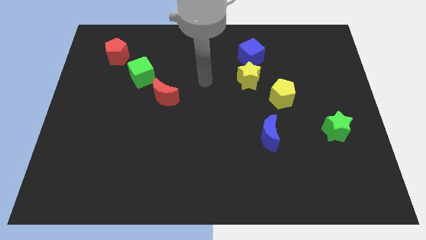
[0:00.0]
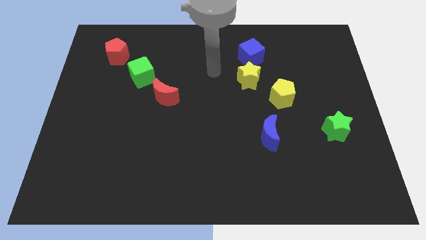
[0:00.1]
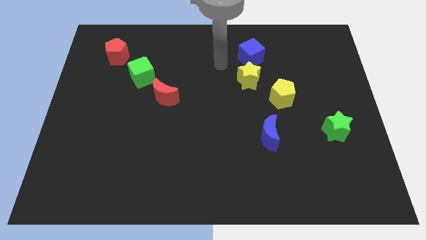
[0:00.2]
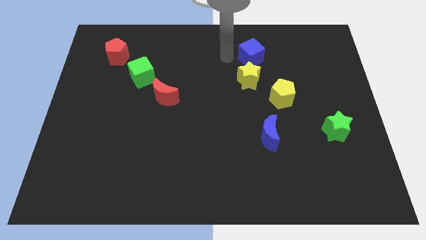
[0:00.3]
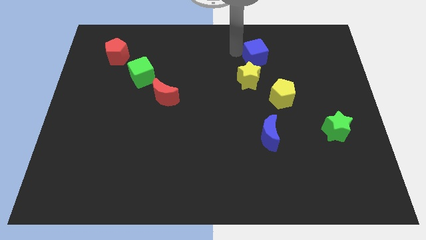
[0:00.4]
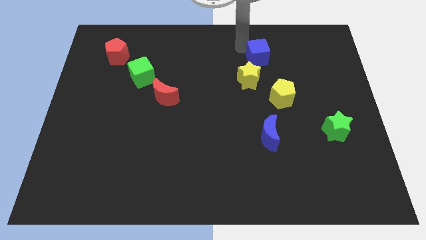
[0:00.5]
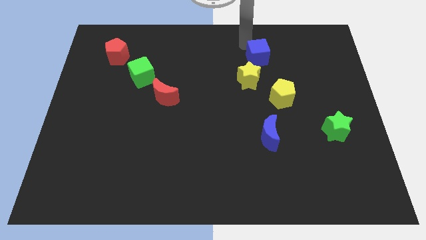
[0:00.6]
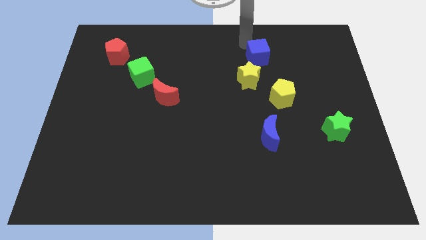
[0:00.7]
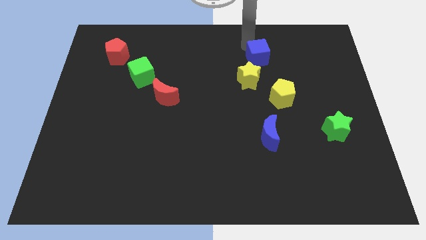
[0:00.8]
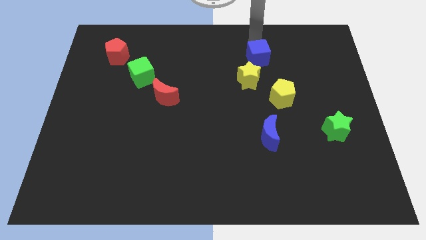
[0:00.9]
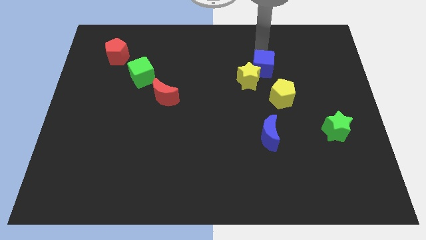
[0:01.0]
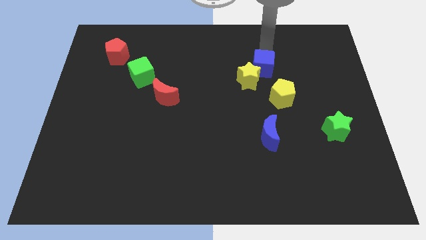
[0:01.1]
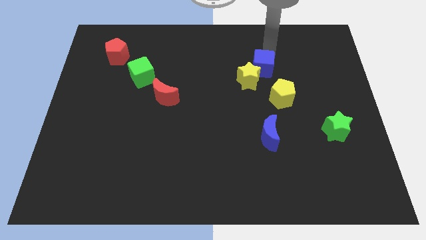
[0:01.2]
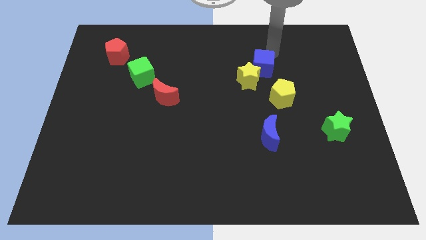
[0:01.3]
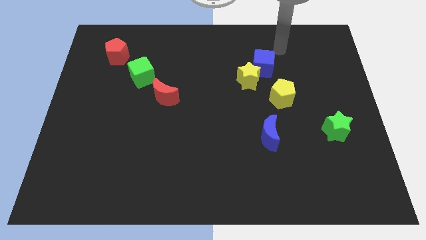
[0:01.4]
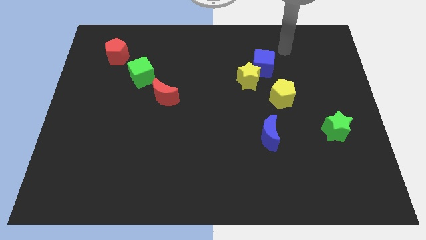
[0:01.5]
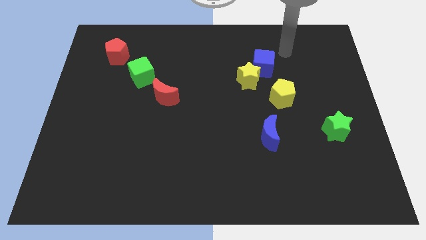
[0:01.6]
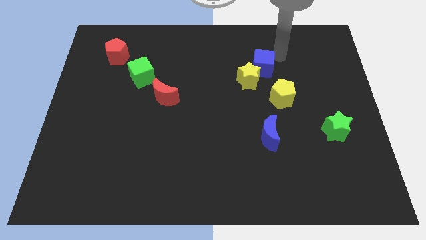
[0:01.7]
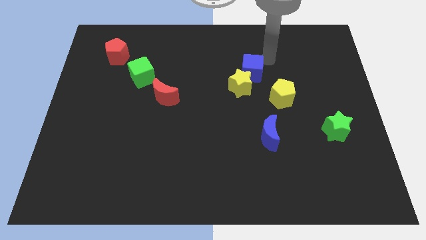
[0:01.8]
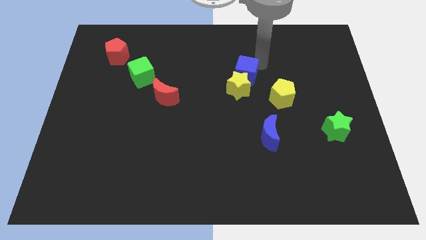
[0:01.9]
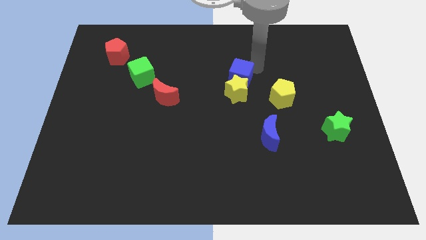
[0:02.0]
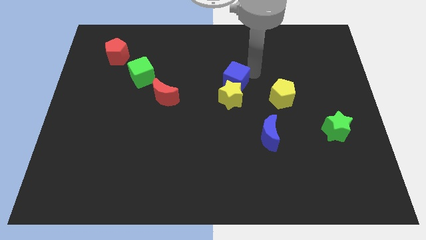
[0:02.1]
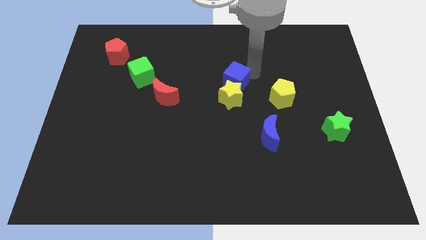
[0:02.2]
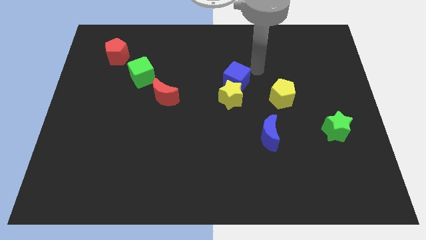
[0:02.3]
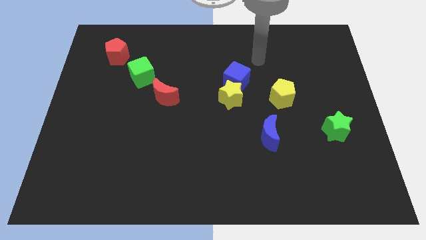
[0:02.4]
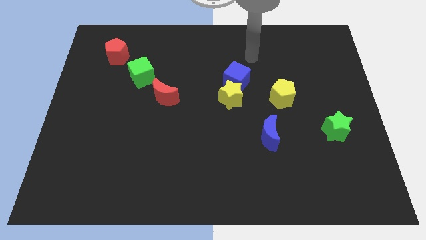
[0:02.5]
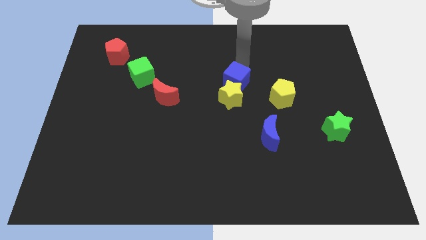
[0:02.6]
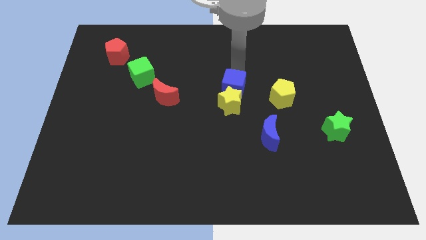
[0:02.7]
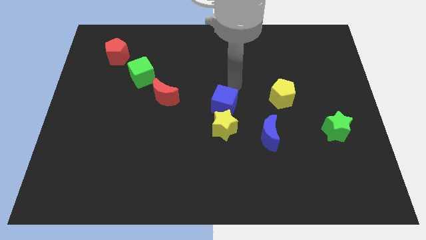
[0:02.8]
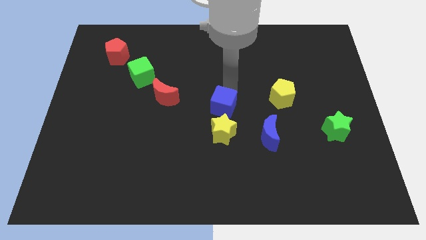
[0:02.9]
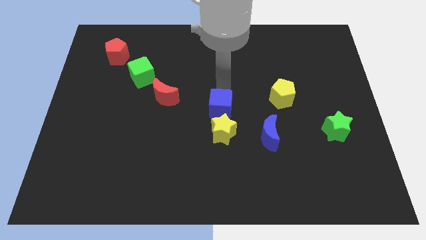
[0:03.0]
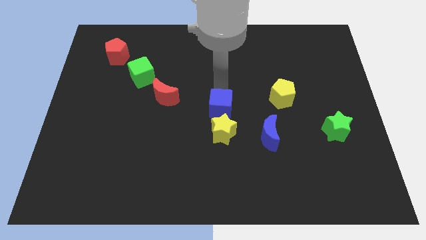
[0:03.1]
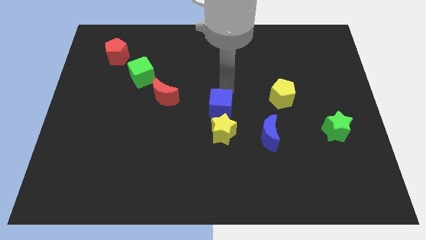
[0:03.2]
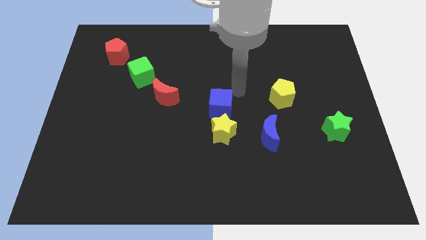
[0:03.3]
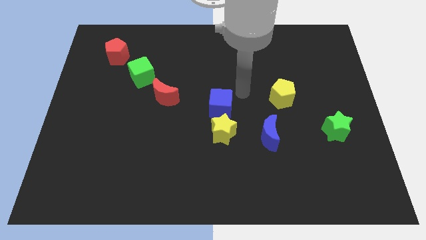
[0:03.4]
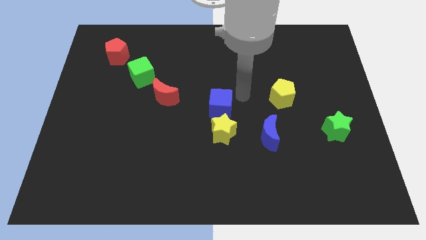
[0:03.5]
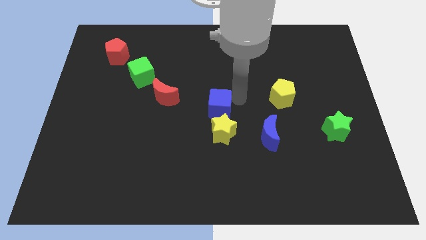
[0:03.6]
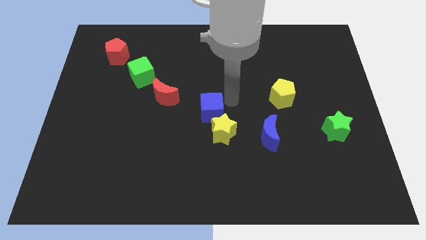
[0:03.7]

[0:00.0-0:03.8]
push the blue cube to the center of board

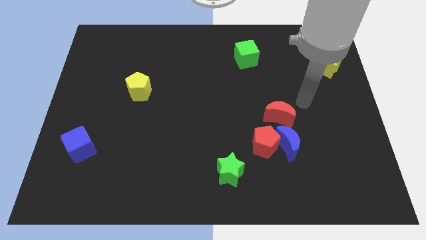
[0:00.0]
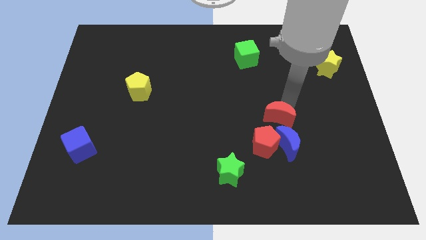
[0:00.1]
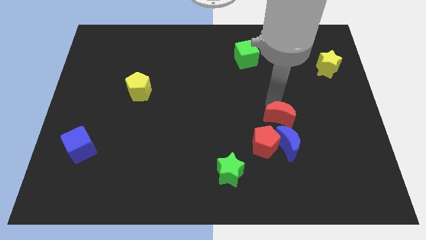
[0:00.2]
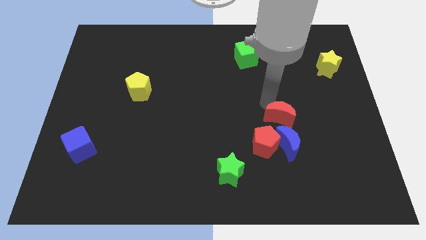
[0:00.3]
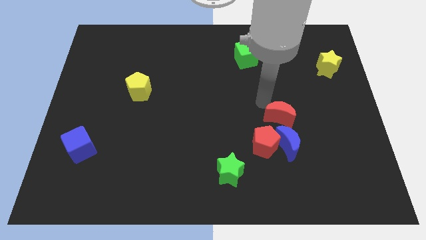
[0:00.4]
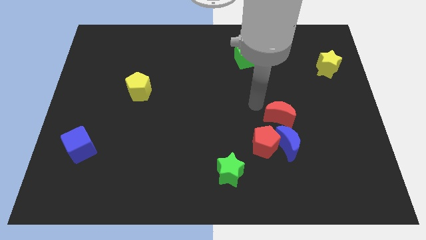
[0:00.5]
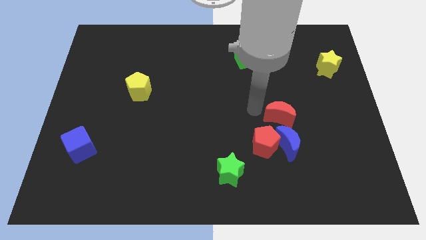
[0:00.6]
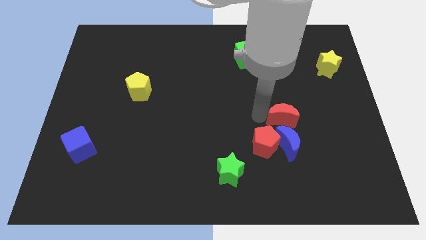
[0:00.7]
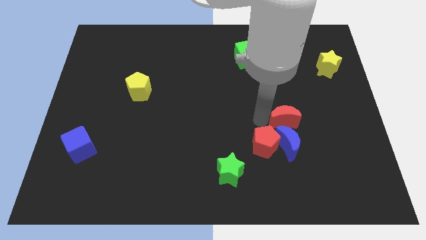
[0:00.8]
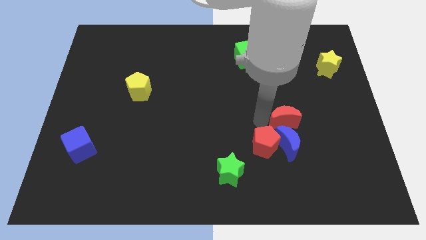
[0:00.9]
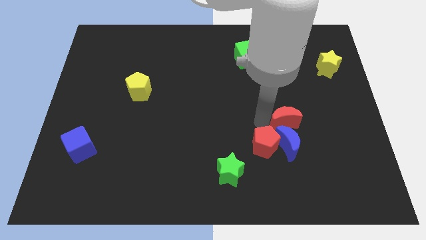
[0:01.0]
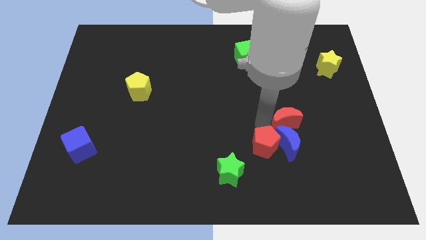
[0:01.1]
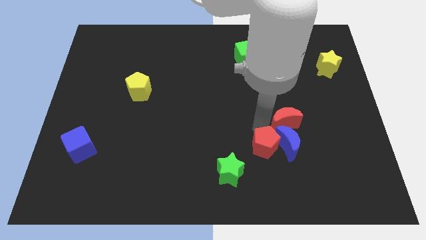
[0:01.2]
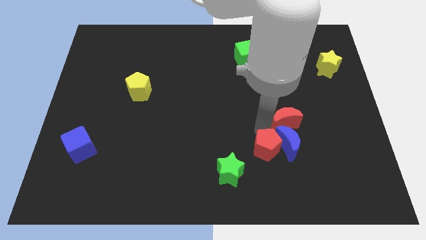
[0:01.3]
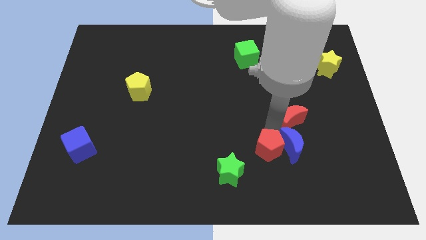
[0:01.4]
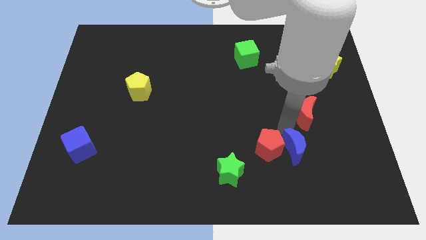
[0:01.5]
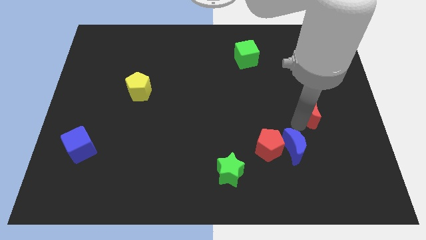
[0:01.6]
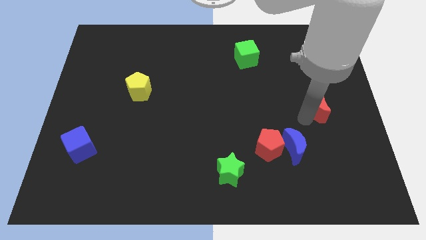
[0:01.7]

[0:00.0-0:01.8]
push the red moon slightly towards the right side of the board

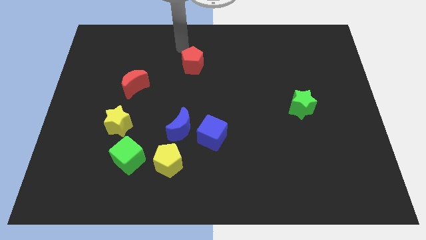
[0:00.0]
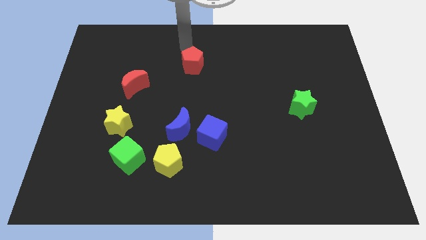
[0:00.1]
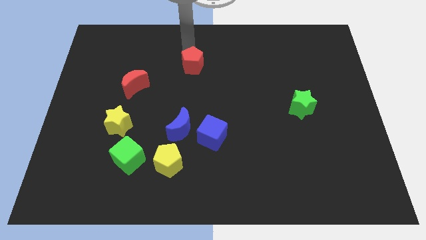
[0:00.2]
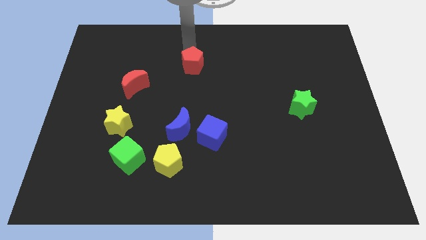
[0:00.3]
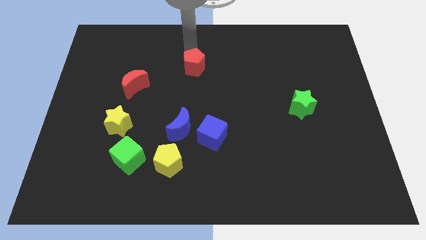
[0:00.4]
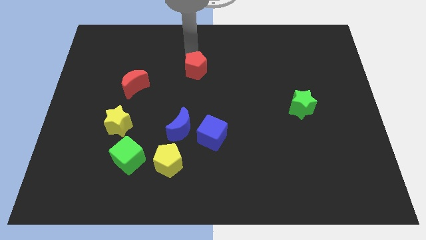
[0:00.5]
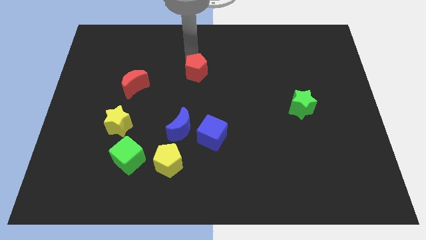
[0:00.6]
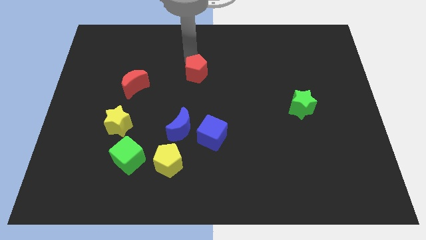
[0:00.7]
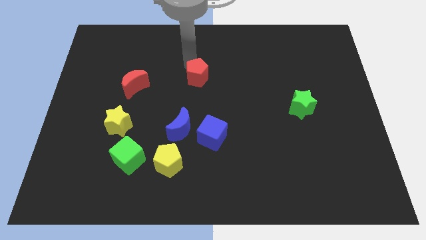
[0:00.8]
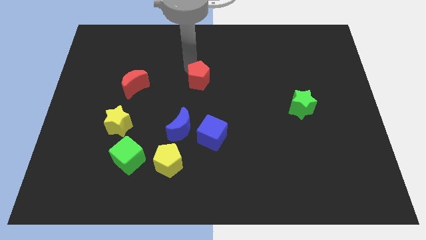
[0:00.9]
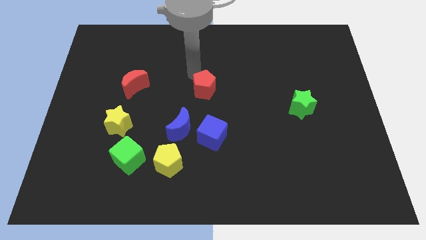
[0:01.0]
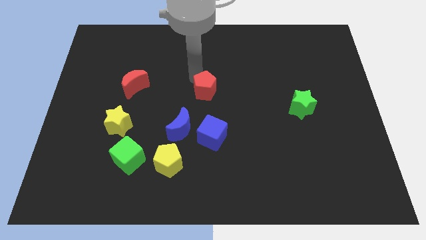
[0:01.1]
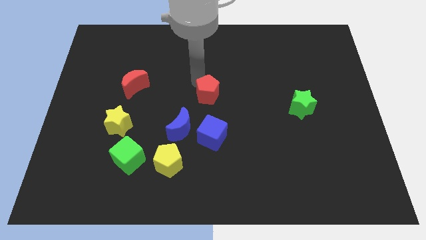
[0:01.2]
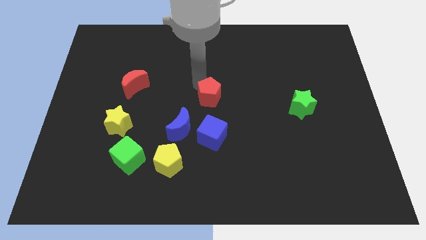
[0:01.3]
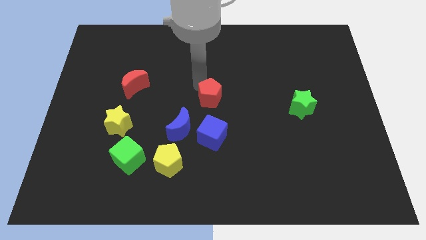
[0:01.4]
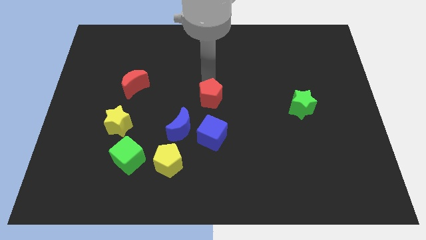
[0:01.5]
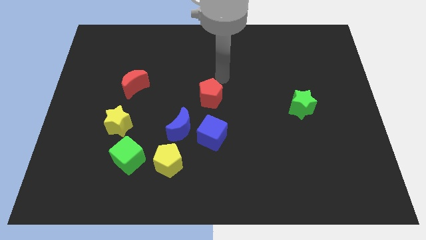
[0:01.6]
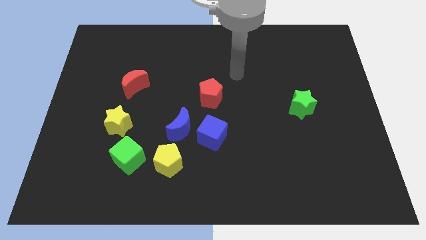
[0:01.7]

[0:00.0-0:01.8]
place the red pentagon above the blue cube

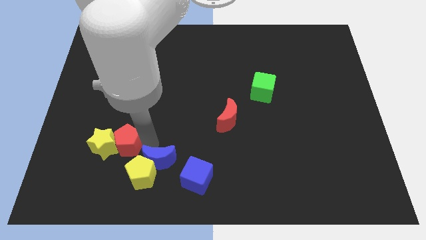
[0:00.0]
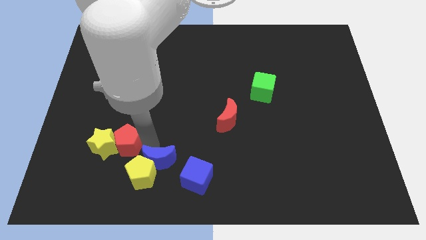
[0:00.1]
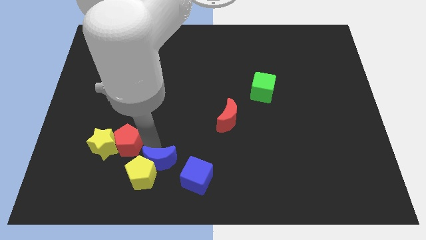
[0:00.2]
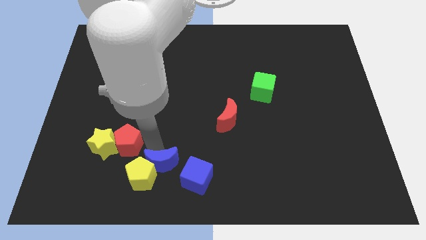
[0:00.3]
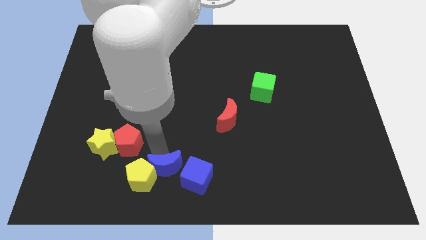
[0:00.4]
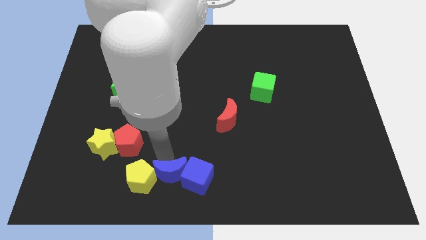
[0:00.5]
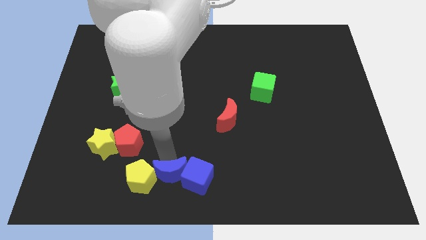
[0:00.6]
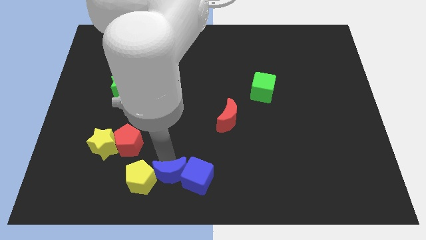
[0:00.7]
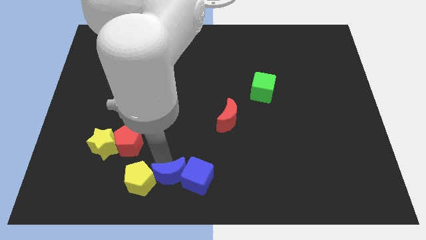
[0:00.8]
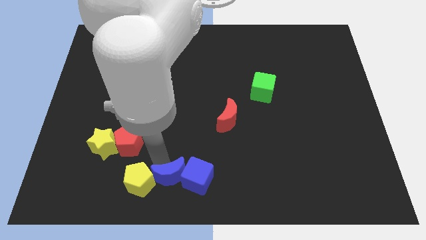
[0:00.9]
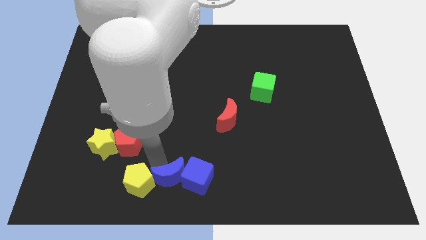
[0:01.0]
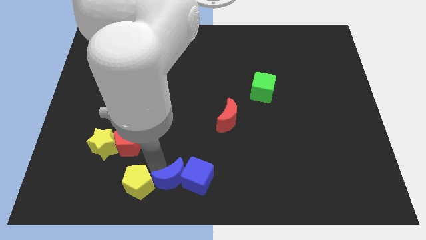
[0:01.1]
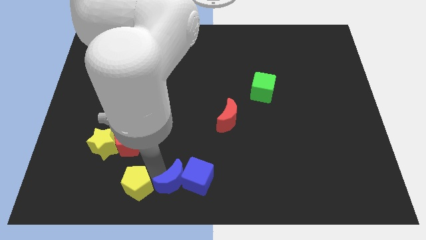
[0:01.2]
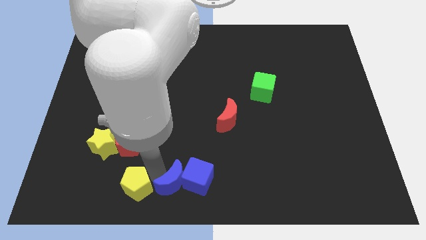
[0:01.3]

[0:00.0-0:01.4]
move the blue crescent into the blue cube
